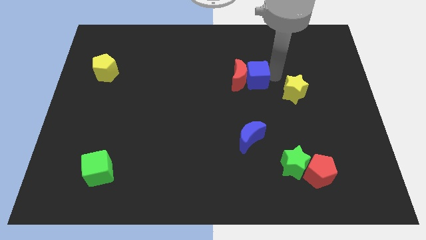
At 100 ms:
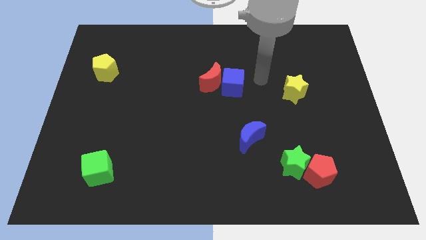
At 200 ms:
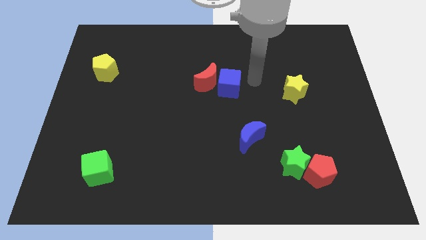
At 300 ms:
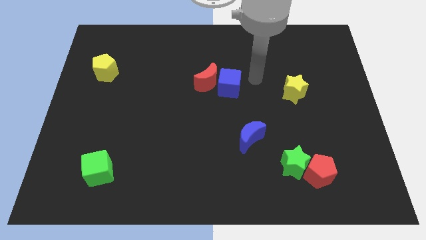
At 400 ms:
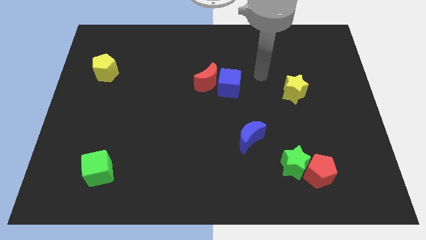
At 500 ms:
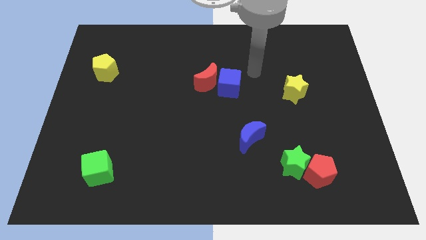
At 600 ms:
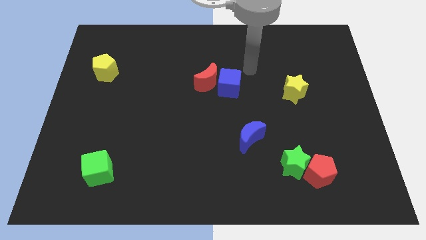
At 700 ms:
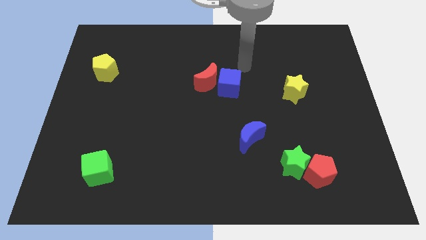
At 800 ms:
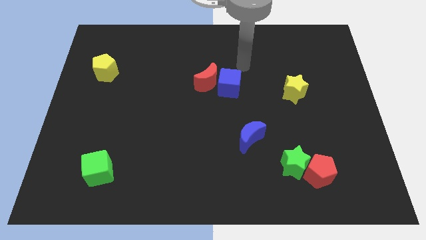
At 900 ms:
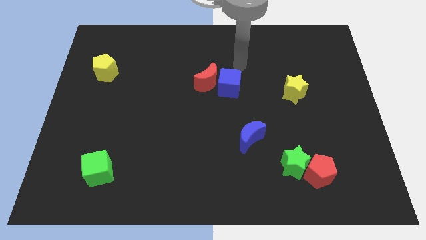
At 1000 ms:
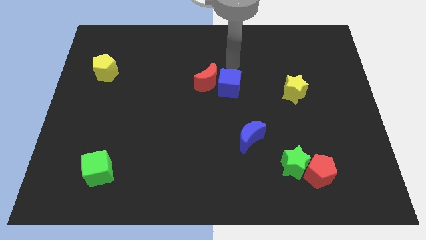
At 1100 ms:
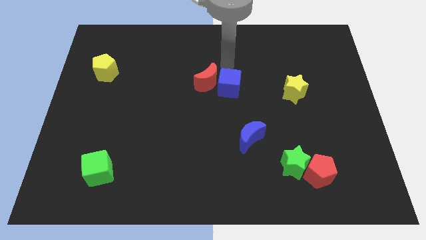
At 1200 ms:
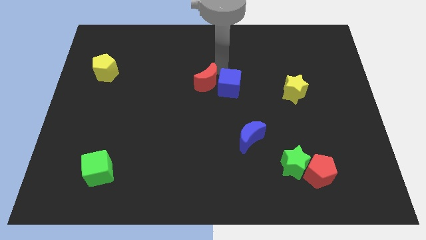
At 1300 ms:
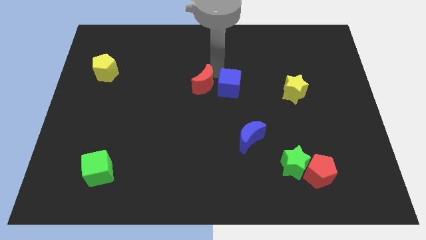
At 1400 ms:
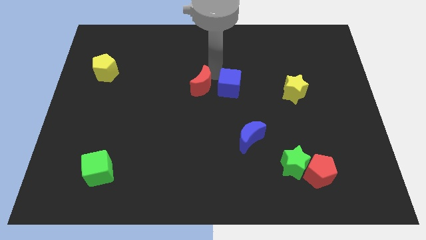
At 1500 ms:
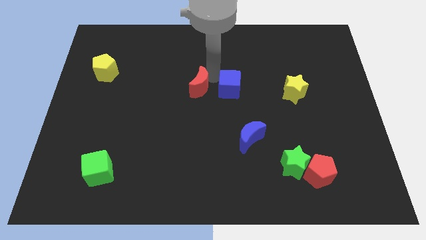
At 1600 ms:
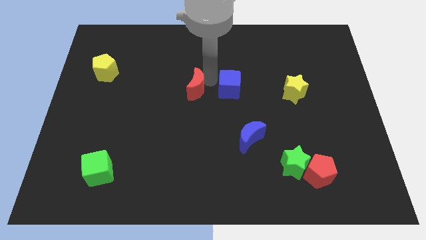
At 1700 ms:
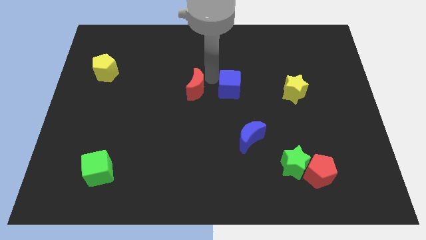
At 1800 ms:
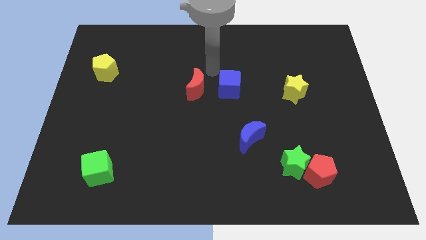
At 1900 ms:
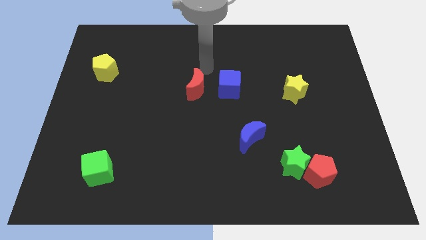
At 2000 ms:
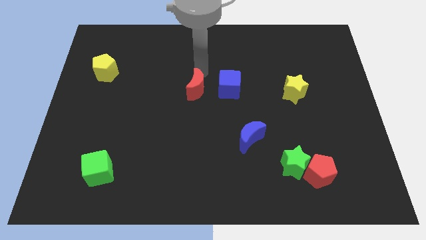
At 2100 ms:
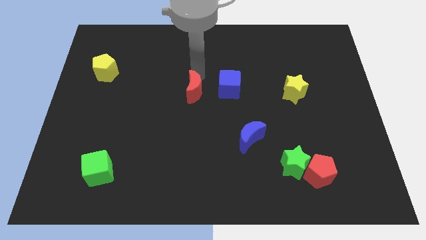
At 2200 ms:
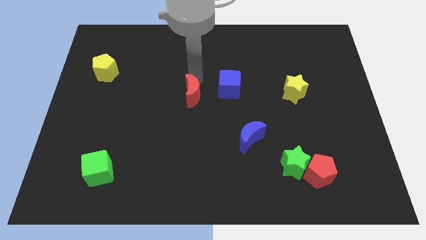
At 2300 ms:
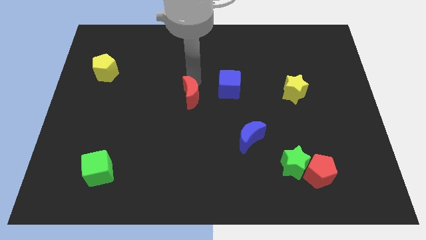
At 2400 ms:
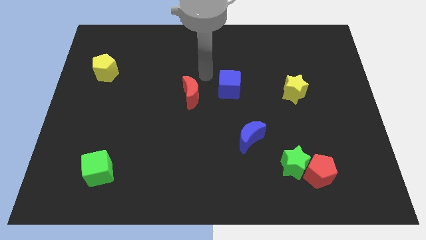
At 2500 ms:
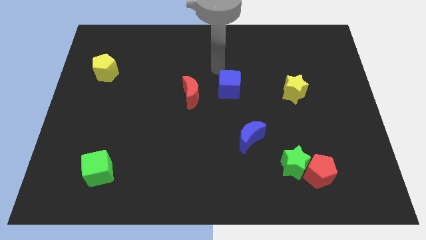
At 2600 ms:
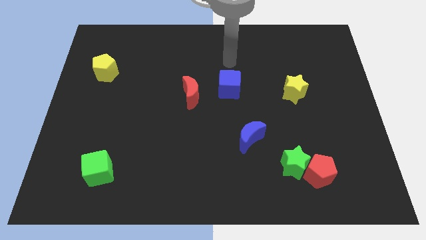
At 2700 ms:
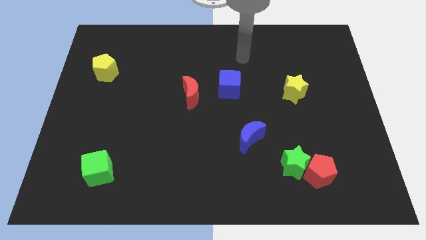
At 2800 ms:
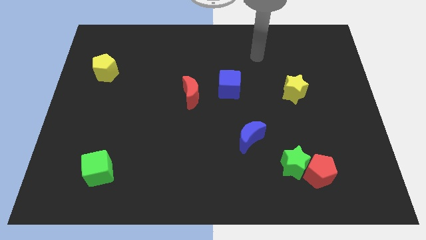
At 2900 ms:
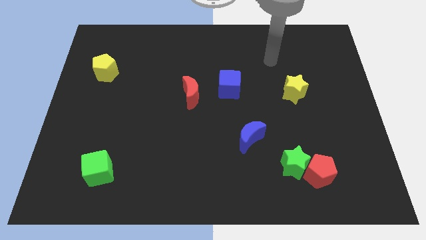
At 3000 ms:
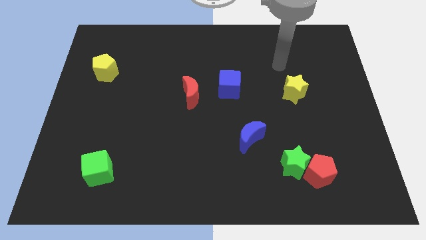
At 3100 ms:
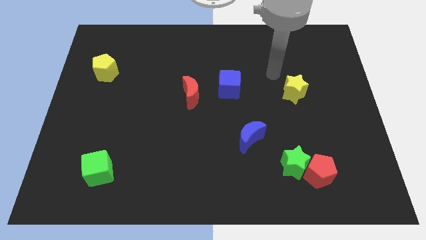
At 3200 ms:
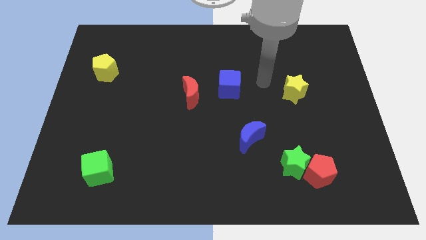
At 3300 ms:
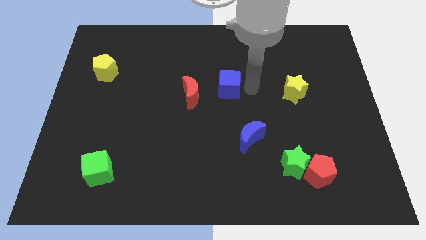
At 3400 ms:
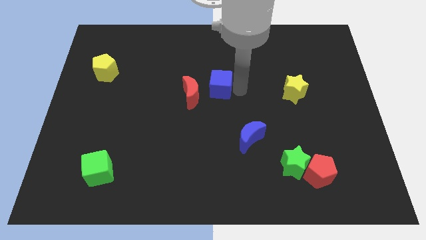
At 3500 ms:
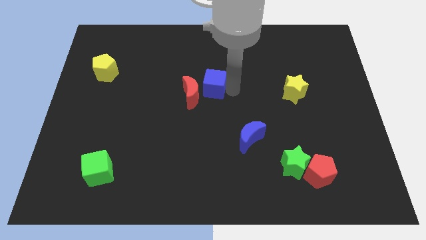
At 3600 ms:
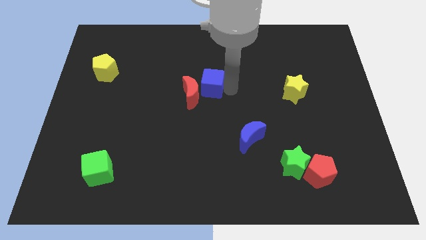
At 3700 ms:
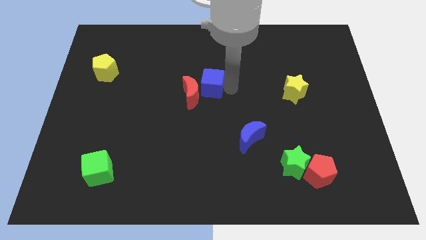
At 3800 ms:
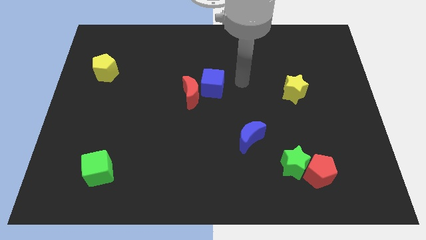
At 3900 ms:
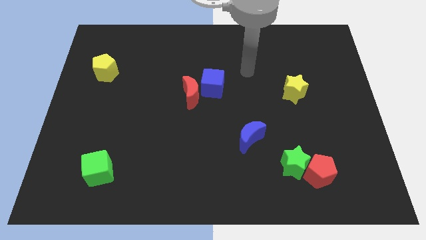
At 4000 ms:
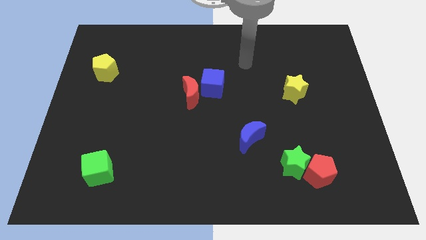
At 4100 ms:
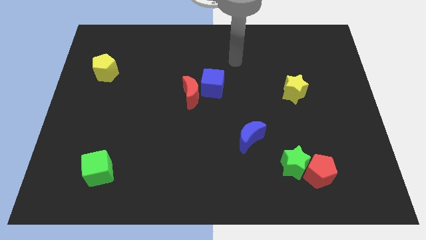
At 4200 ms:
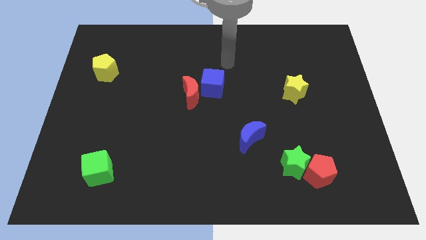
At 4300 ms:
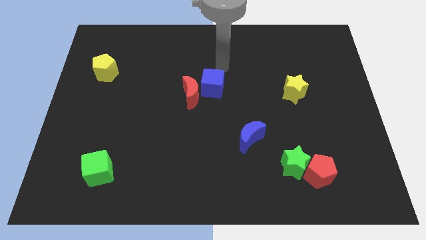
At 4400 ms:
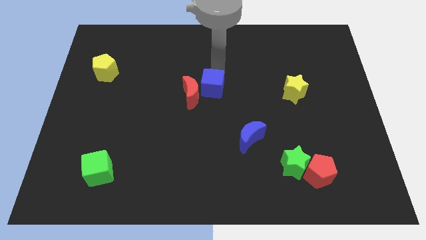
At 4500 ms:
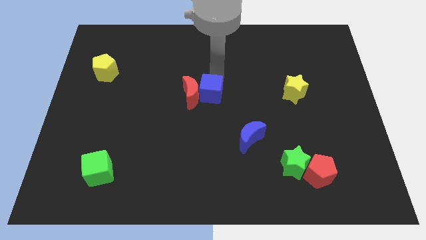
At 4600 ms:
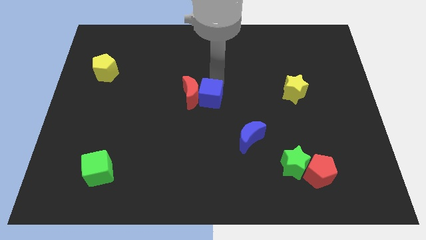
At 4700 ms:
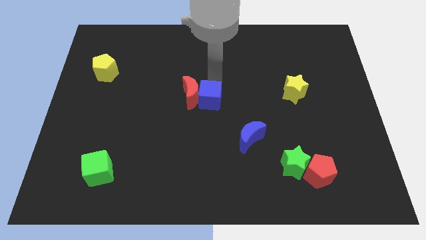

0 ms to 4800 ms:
place the blue cube to center of the board

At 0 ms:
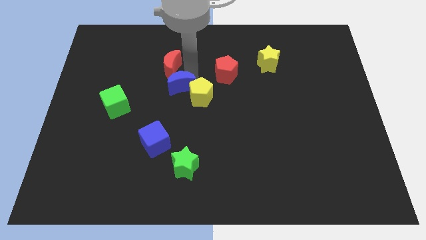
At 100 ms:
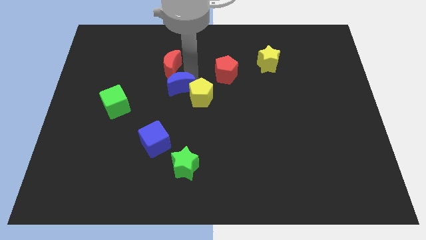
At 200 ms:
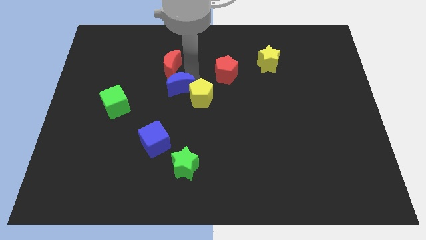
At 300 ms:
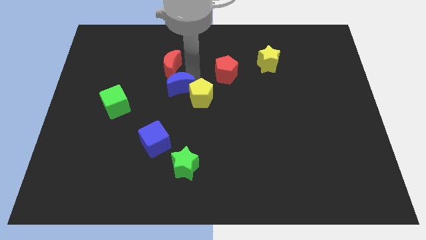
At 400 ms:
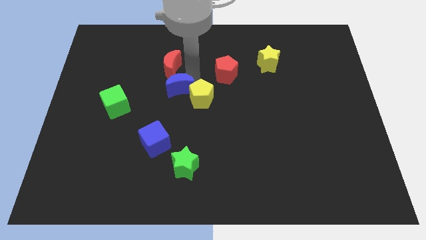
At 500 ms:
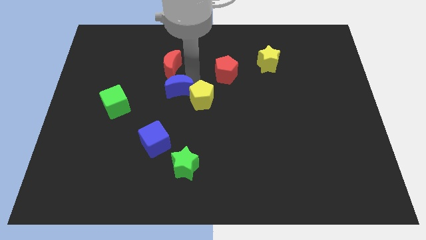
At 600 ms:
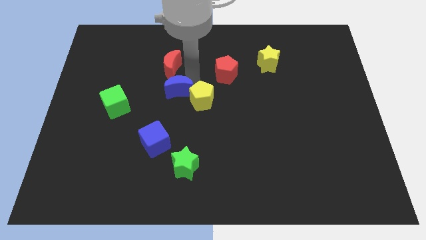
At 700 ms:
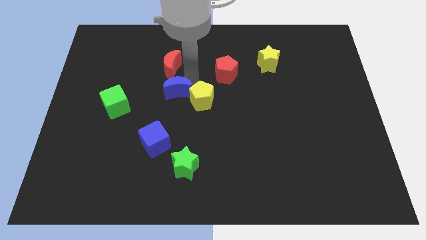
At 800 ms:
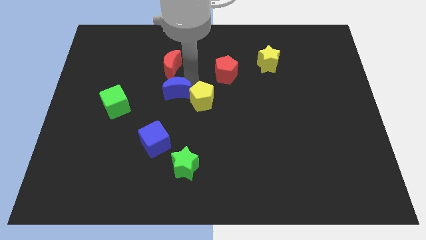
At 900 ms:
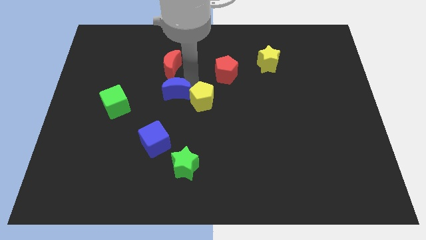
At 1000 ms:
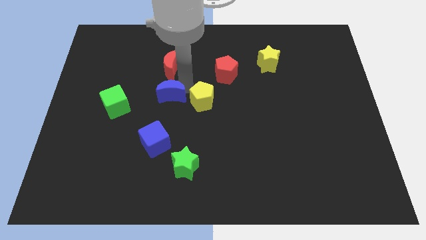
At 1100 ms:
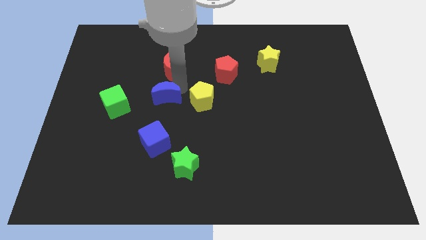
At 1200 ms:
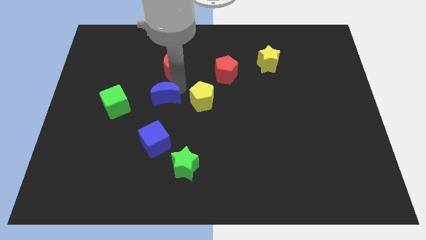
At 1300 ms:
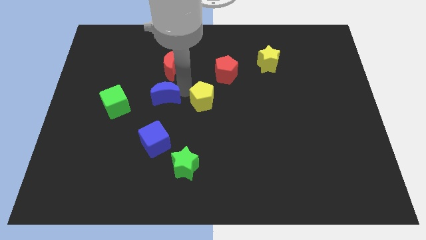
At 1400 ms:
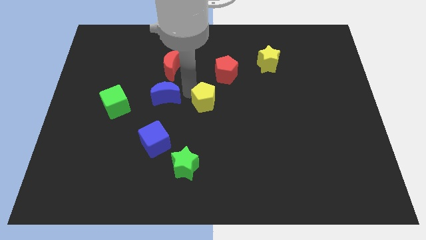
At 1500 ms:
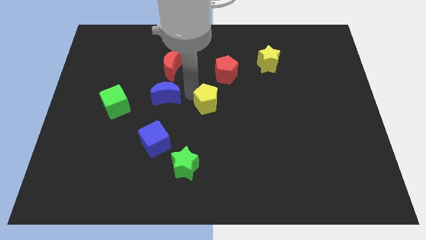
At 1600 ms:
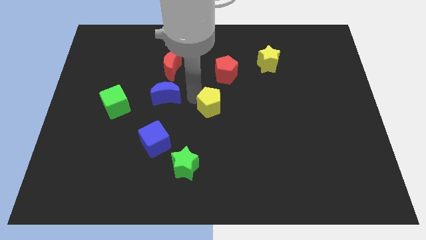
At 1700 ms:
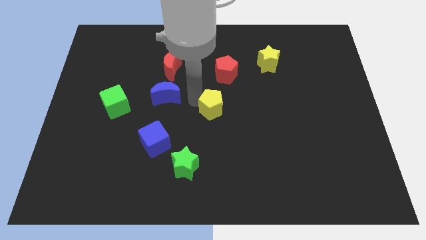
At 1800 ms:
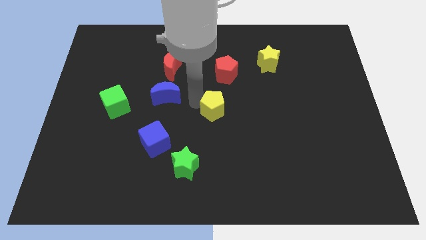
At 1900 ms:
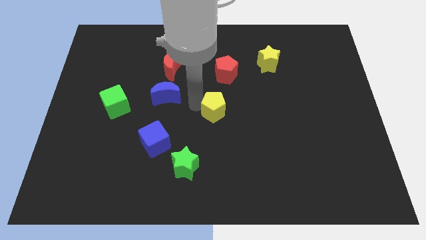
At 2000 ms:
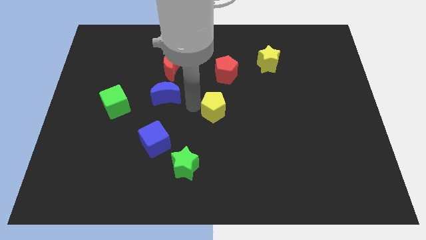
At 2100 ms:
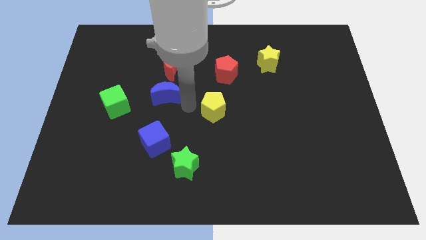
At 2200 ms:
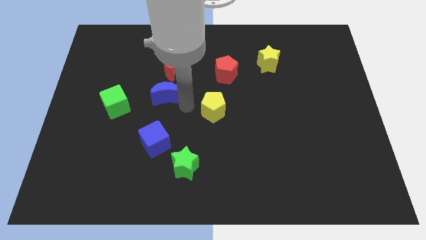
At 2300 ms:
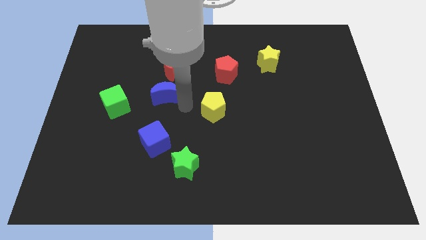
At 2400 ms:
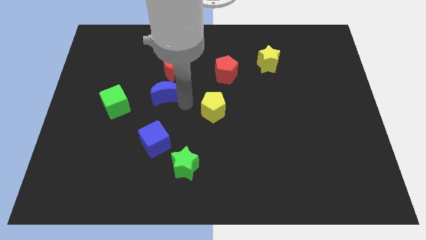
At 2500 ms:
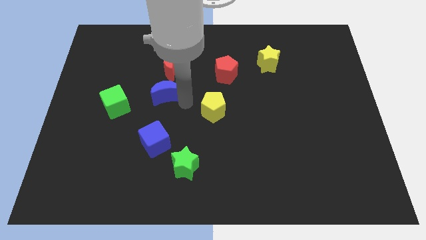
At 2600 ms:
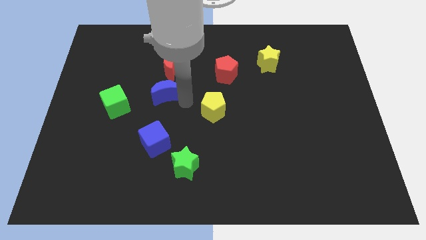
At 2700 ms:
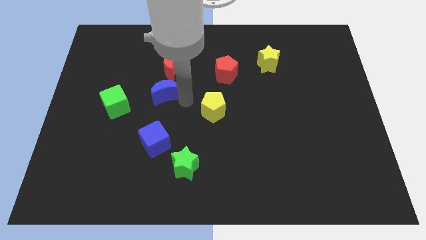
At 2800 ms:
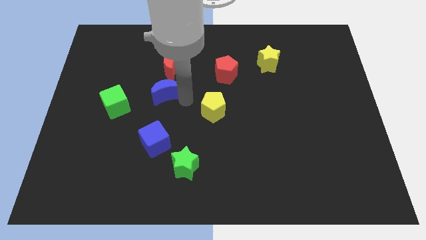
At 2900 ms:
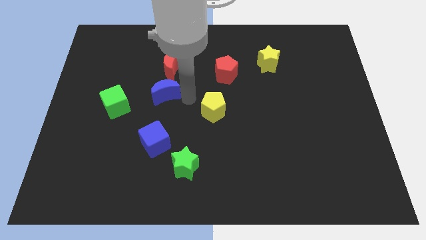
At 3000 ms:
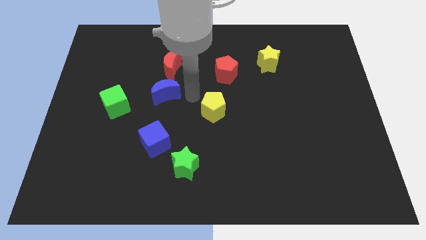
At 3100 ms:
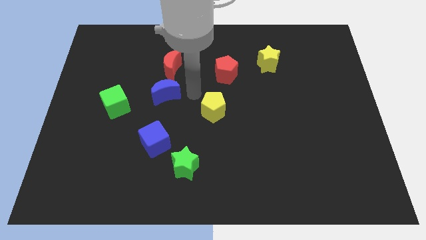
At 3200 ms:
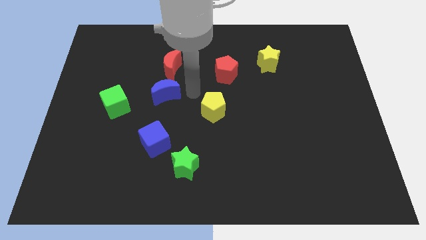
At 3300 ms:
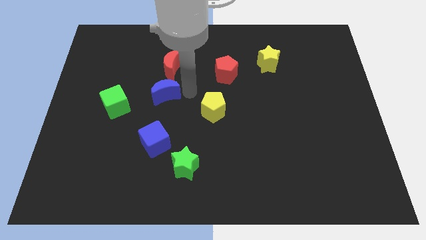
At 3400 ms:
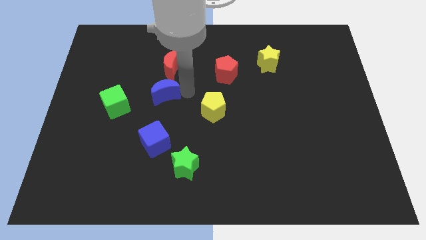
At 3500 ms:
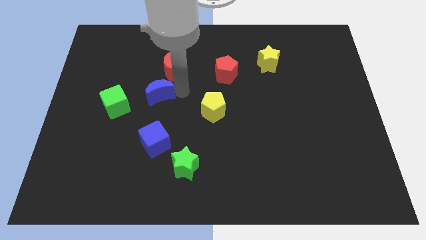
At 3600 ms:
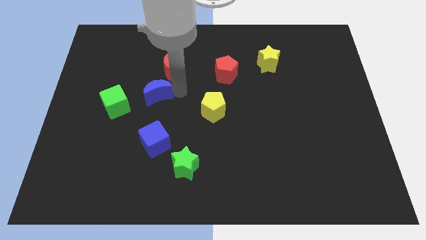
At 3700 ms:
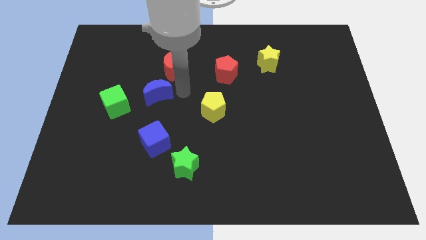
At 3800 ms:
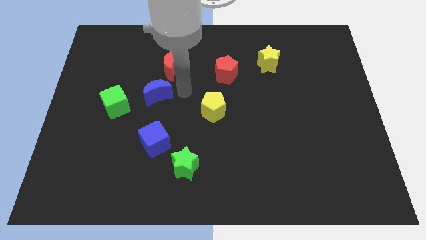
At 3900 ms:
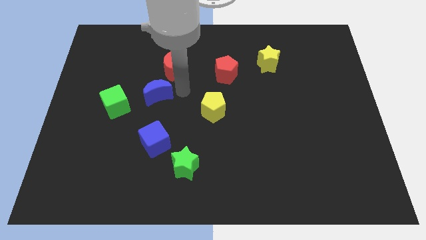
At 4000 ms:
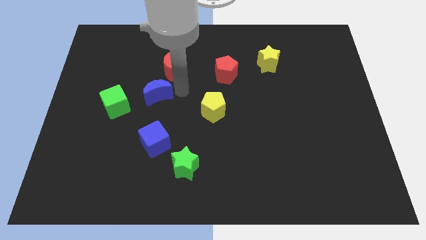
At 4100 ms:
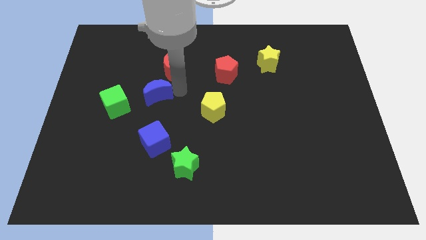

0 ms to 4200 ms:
separate the blue moon from the yellow pentagon

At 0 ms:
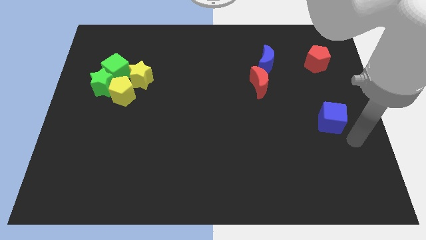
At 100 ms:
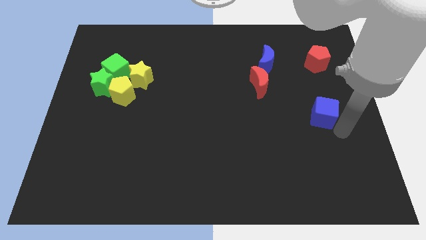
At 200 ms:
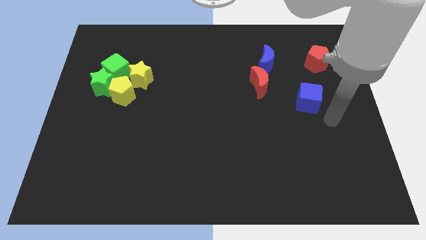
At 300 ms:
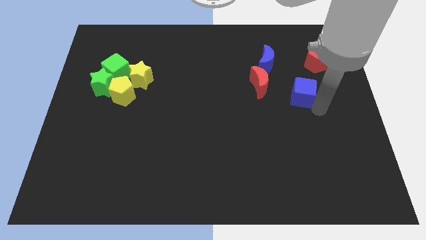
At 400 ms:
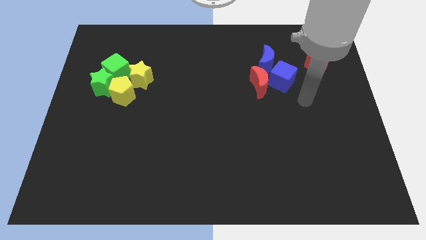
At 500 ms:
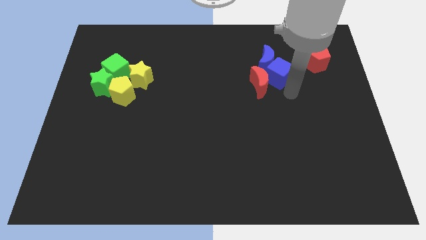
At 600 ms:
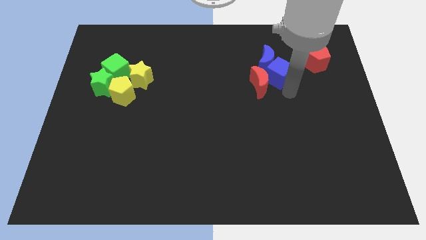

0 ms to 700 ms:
move blue cube to the bottom right side of the blue crescent
